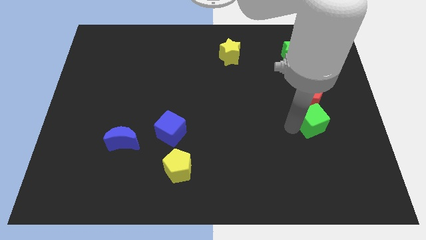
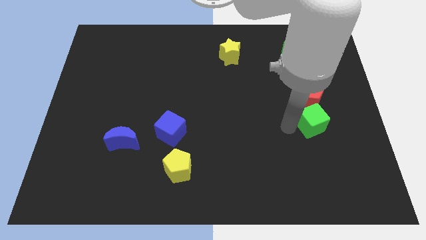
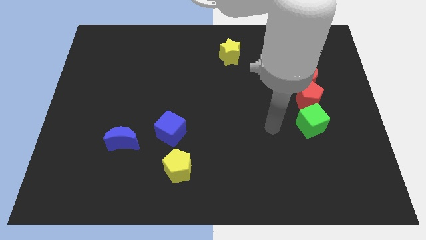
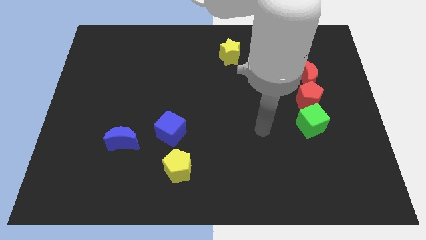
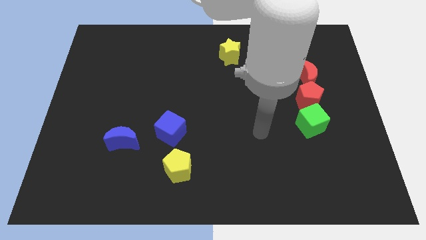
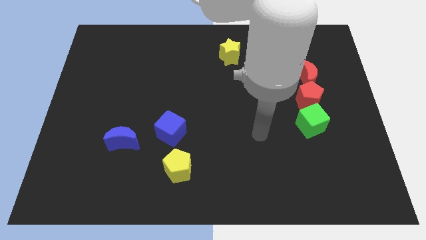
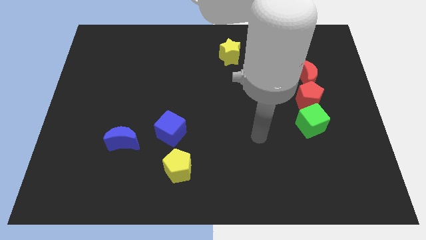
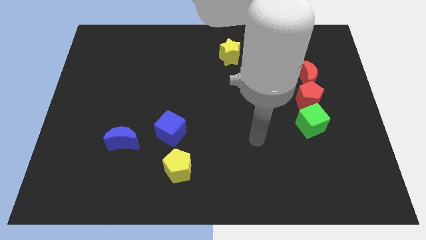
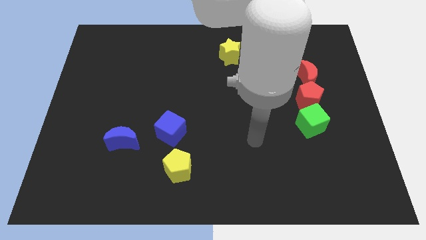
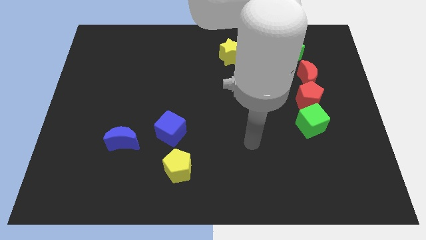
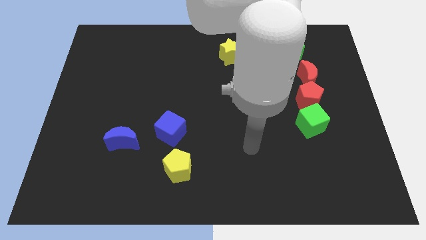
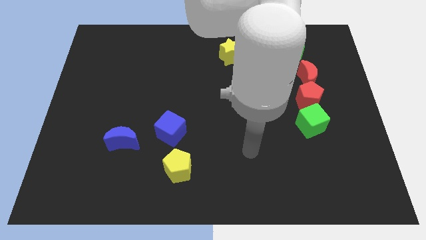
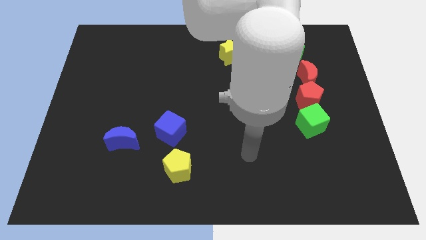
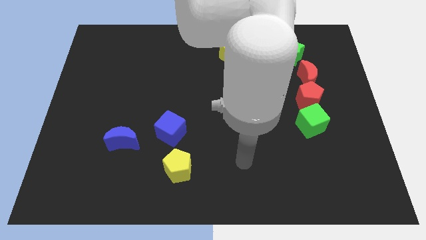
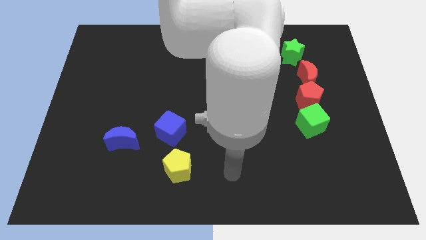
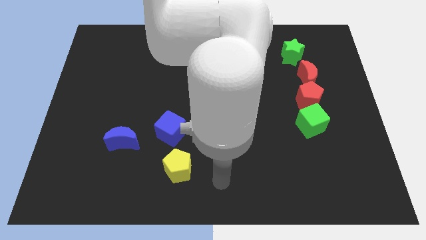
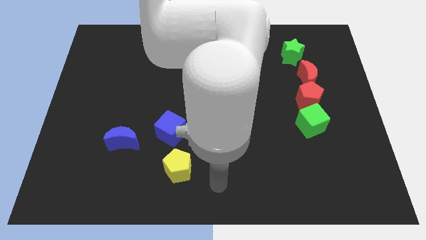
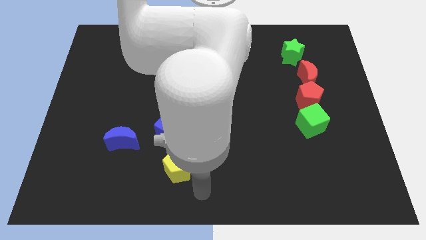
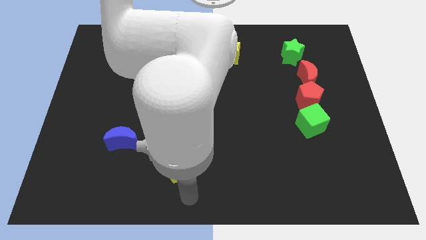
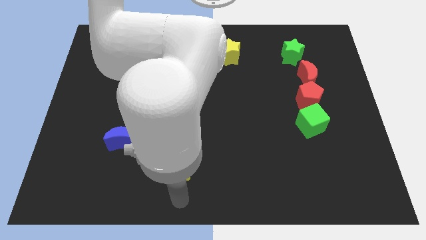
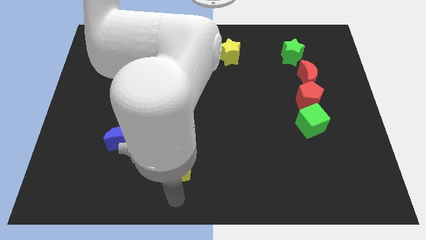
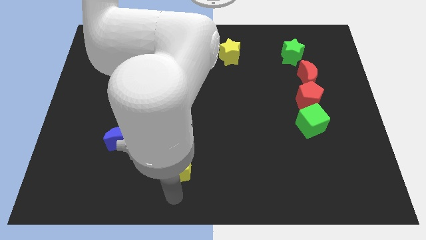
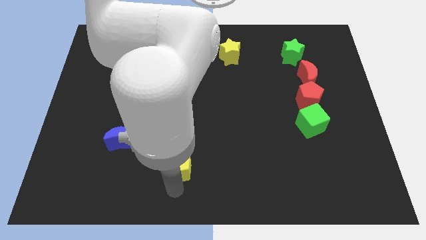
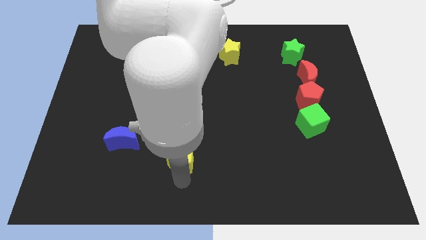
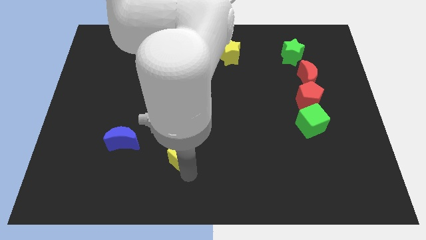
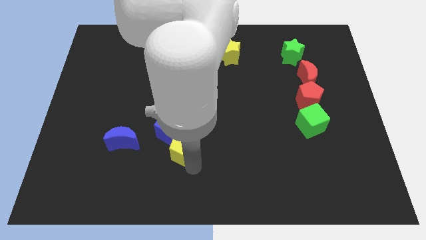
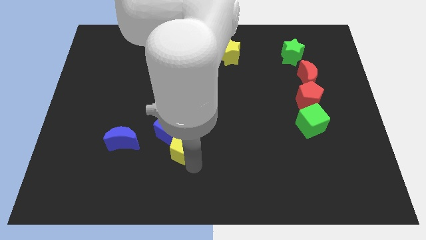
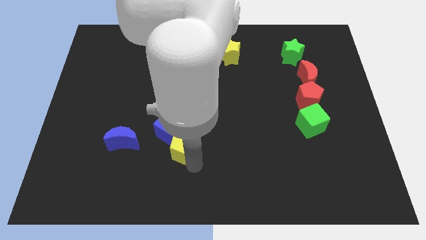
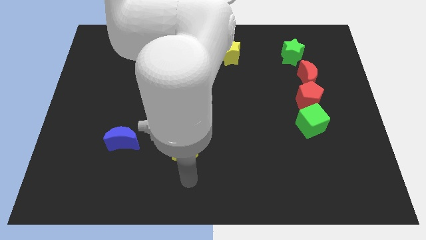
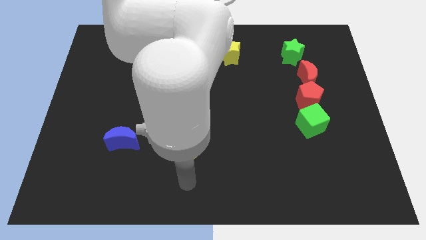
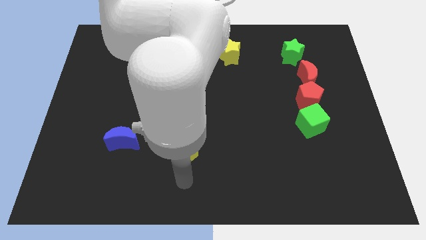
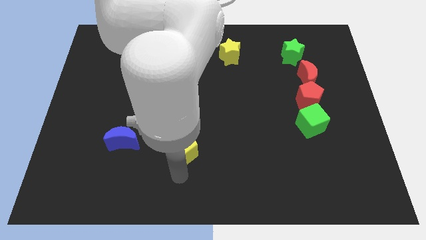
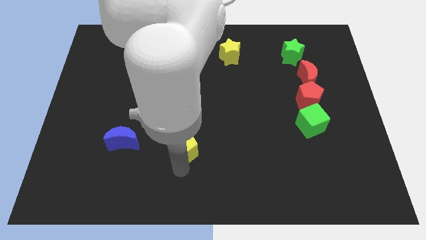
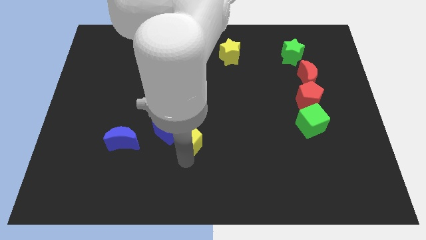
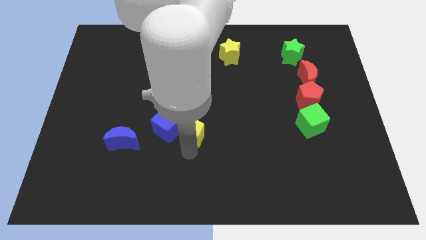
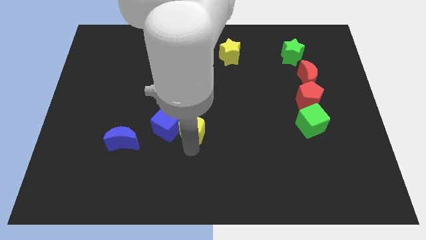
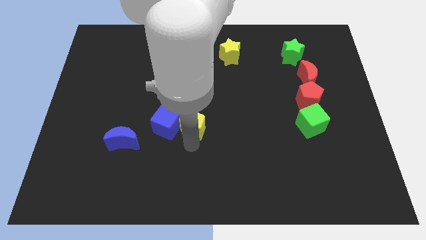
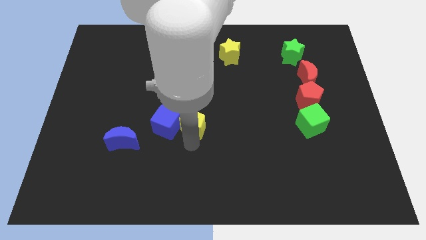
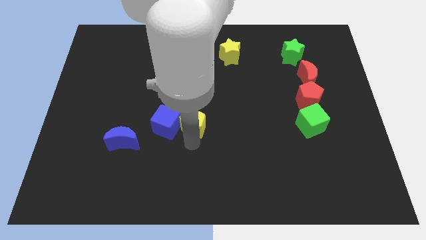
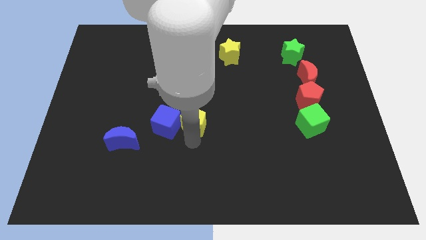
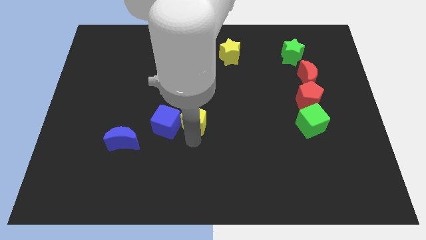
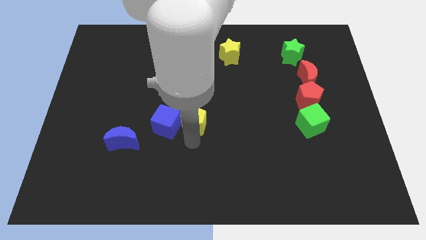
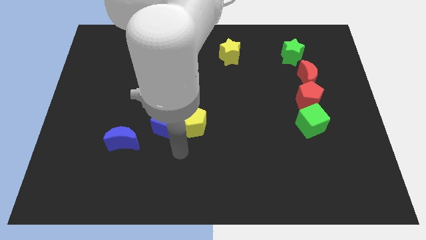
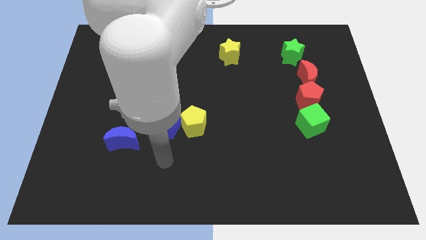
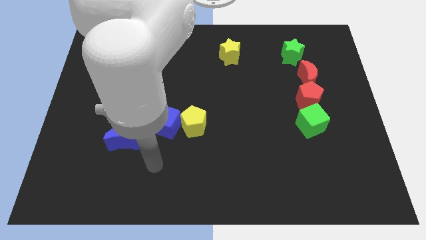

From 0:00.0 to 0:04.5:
push the yellow pentagon upward

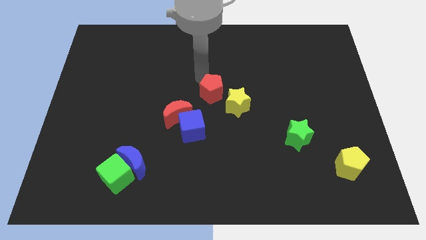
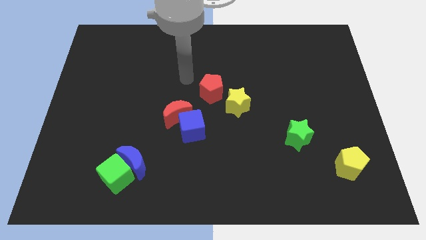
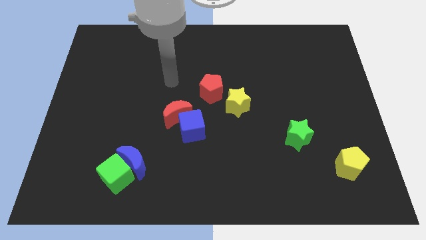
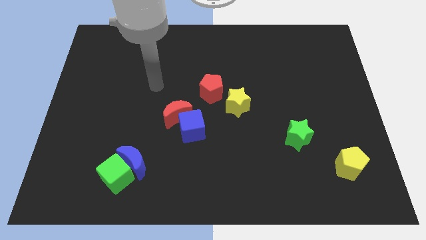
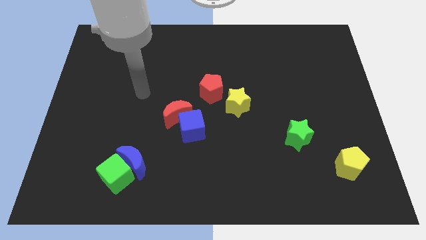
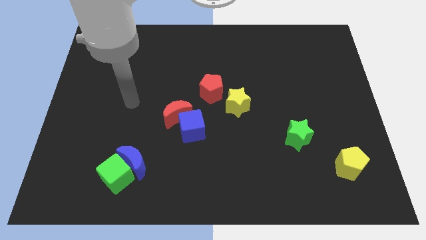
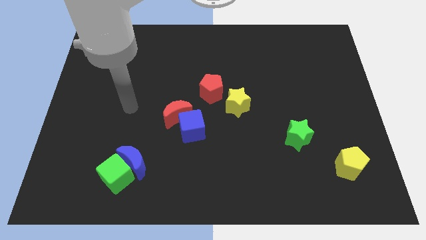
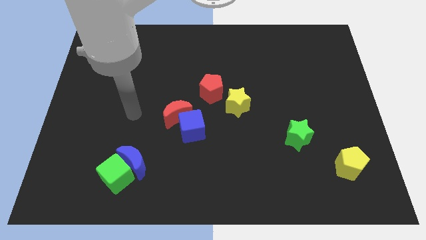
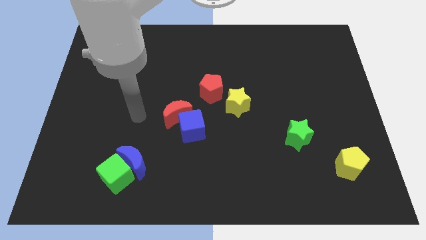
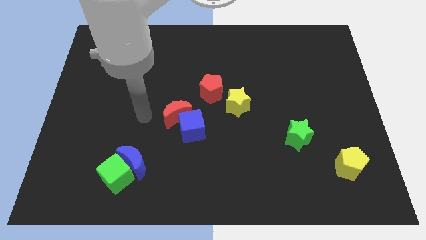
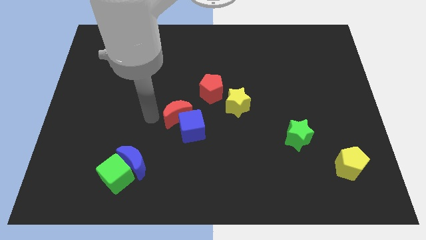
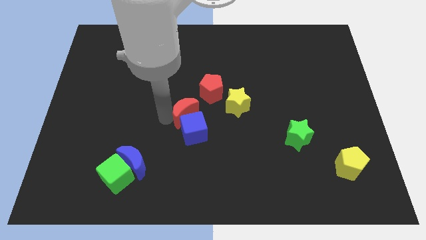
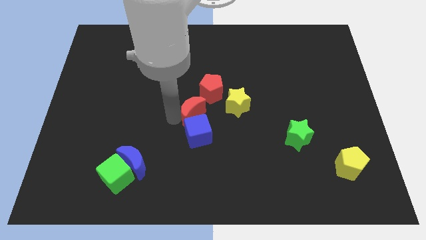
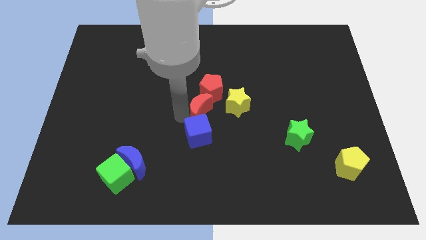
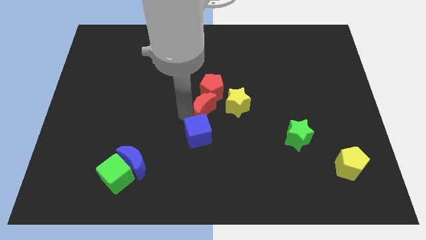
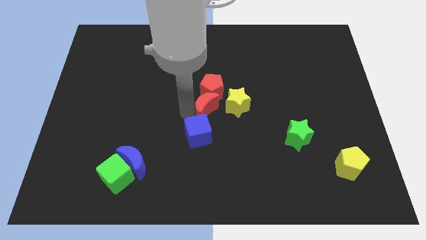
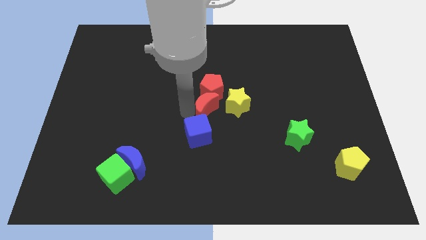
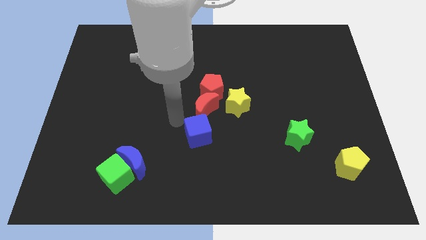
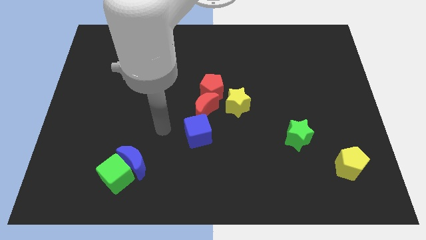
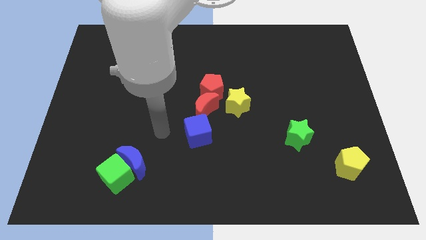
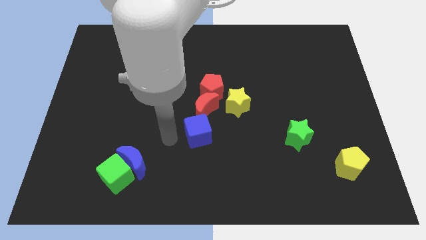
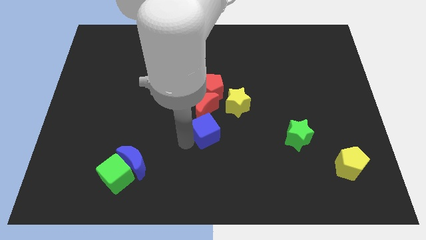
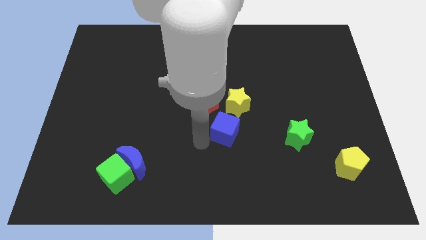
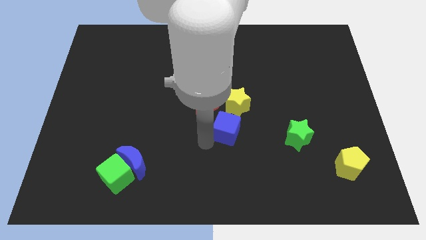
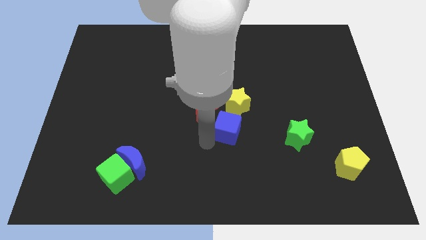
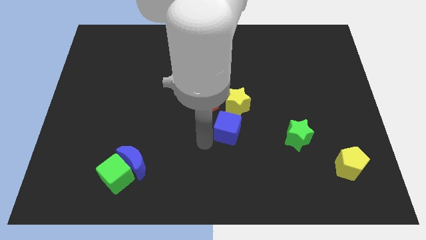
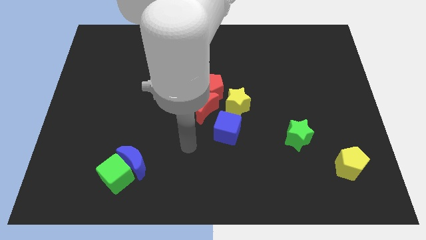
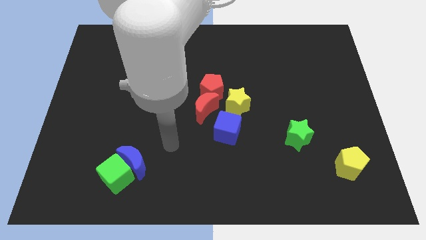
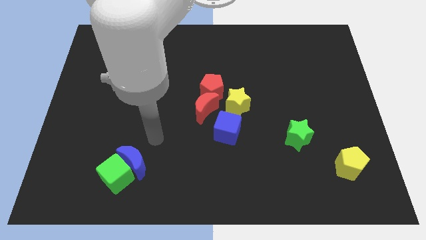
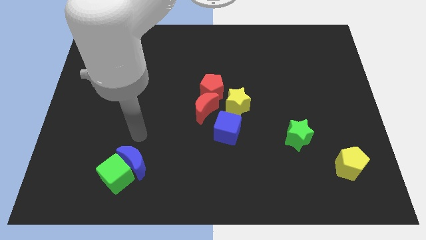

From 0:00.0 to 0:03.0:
make a group of blocks at the center of the table

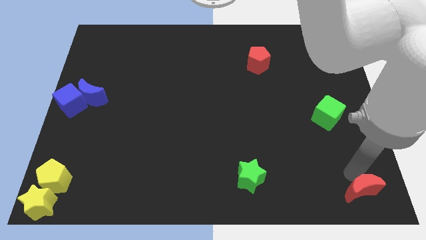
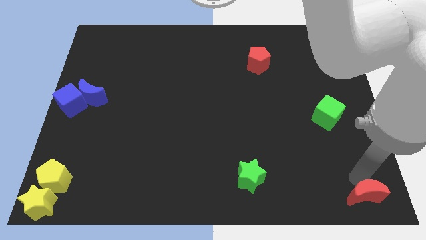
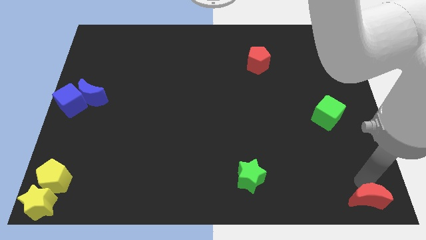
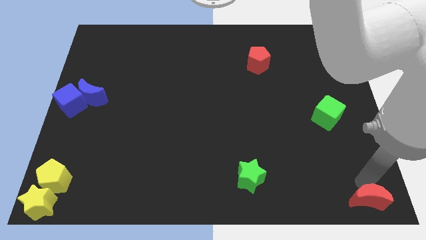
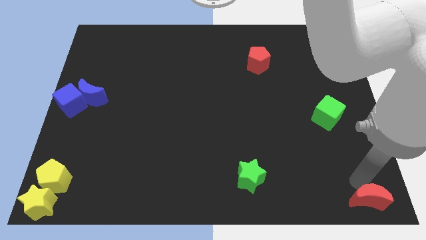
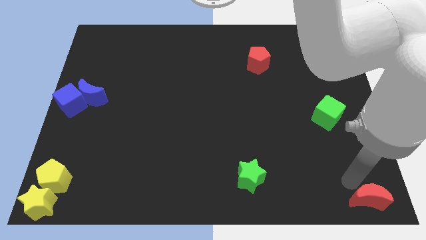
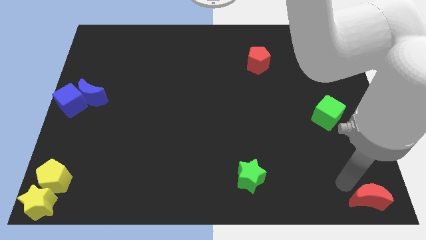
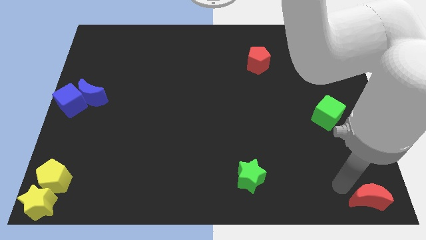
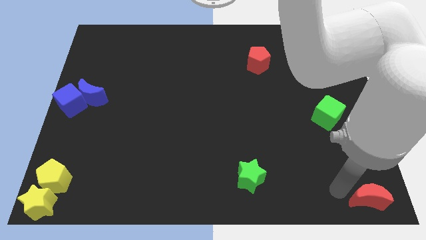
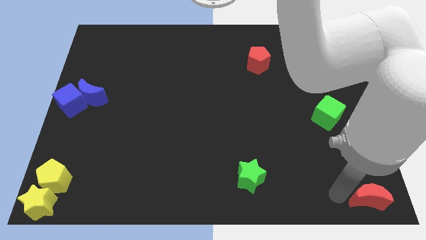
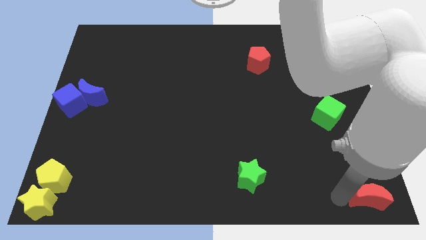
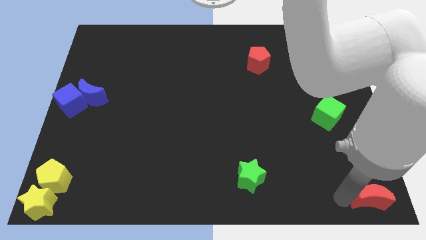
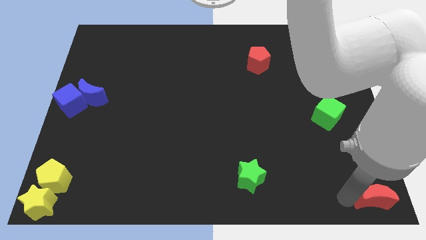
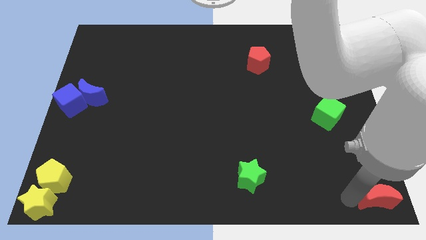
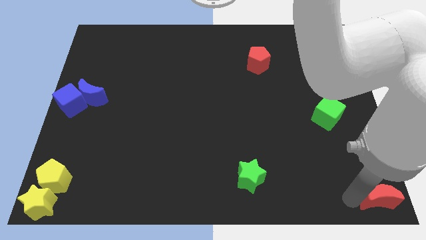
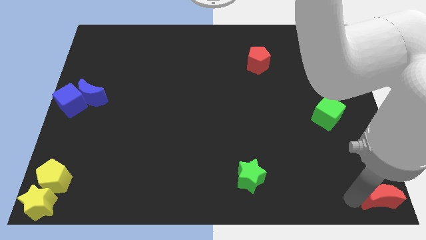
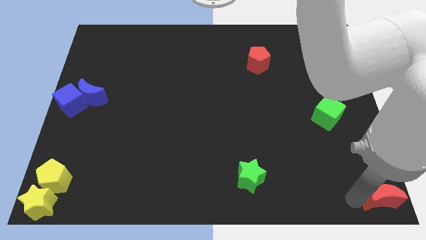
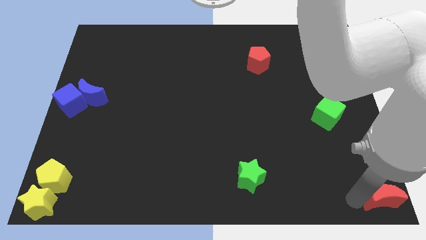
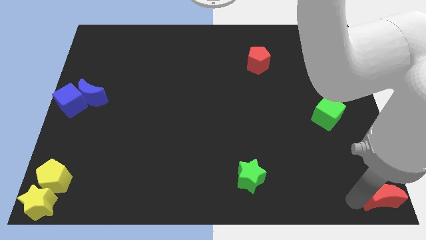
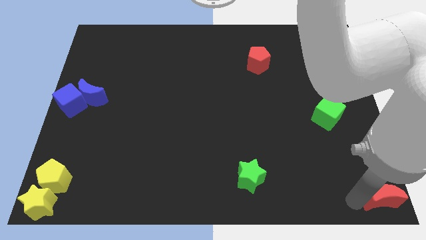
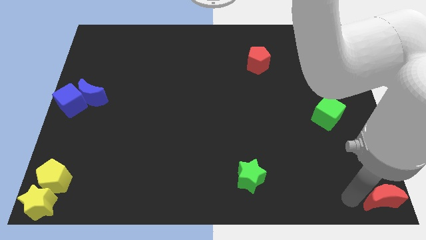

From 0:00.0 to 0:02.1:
move the red crescent towards the bottom right corner of the board
